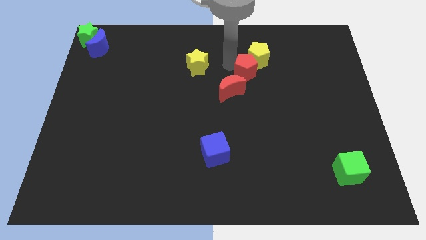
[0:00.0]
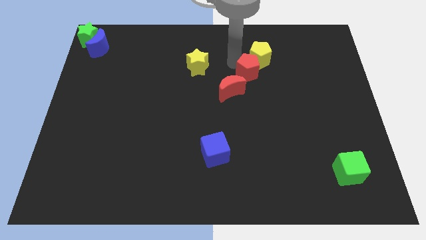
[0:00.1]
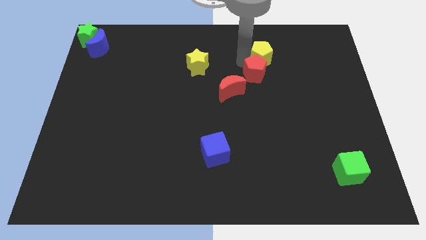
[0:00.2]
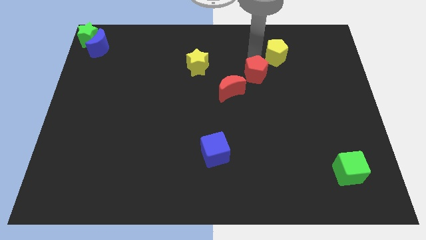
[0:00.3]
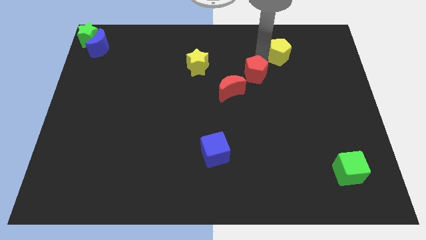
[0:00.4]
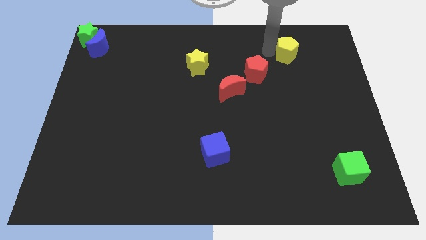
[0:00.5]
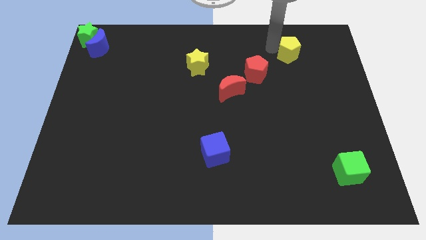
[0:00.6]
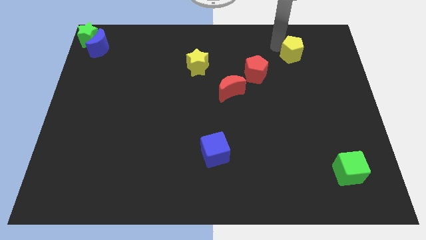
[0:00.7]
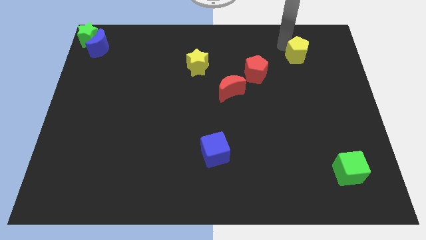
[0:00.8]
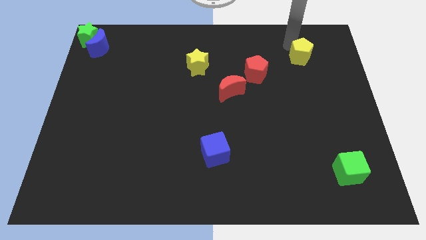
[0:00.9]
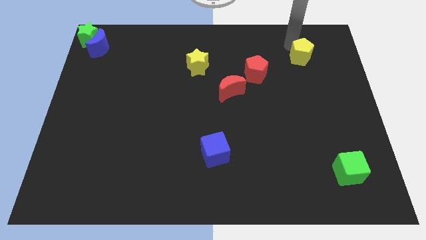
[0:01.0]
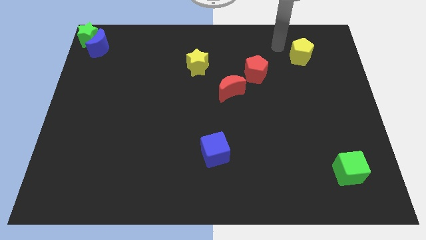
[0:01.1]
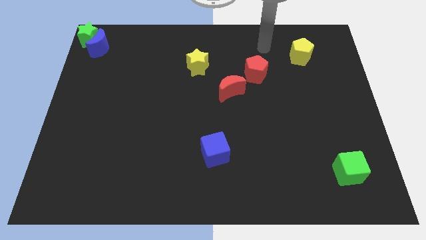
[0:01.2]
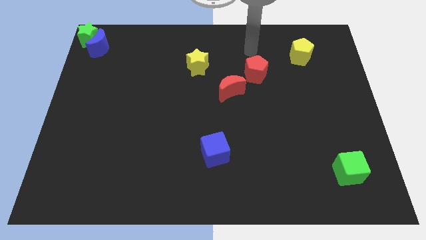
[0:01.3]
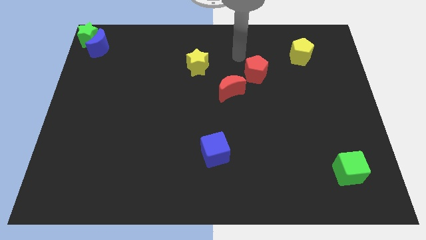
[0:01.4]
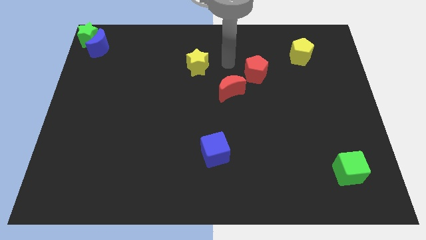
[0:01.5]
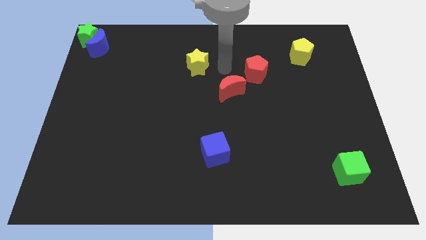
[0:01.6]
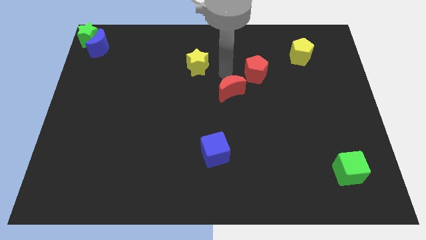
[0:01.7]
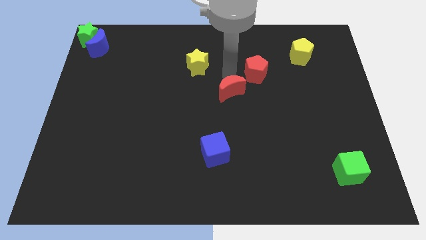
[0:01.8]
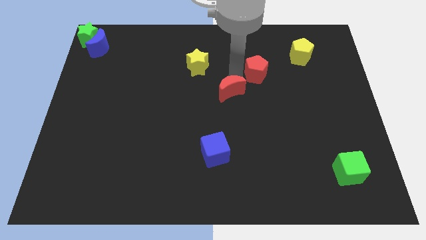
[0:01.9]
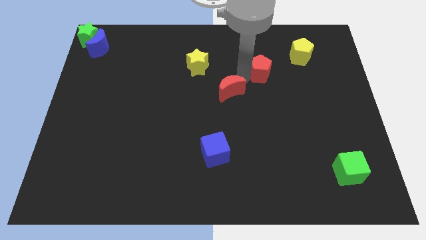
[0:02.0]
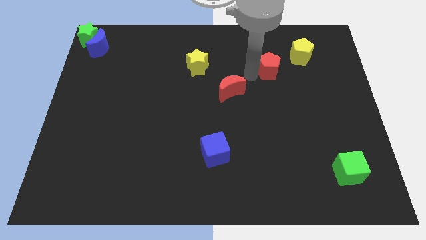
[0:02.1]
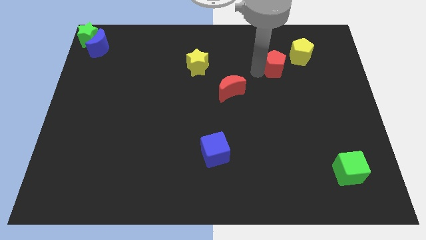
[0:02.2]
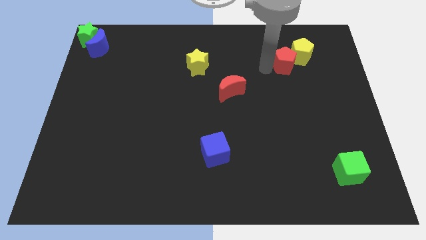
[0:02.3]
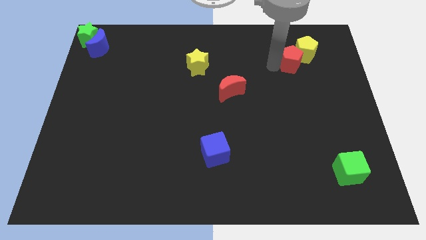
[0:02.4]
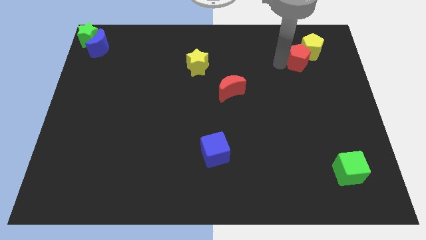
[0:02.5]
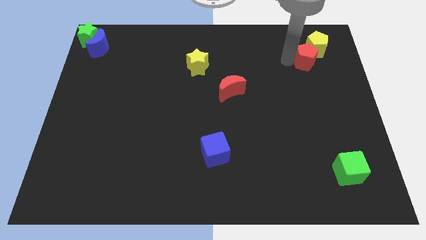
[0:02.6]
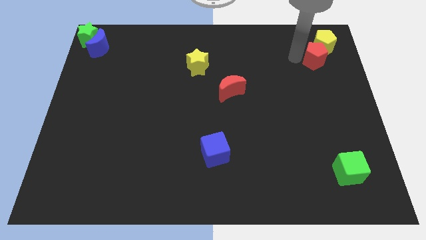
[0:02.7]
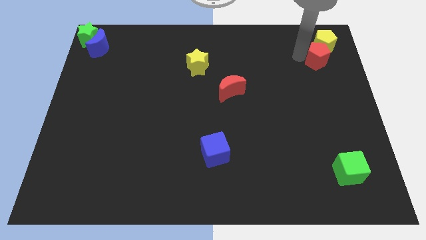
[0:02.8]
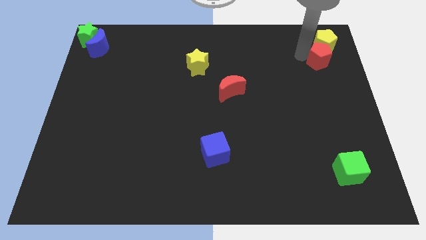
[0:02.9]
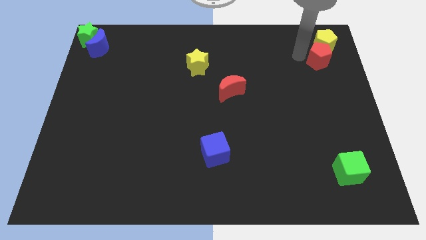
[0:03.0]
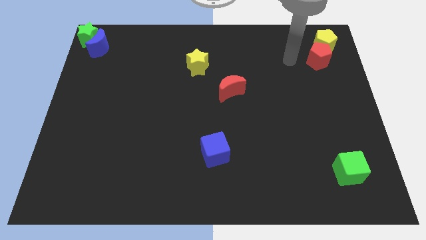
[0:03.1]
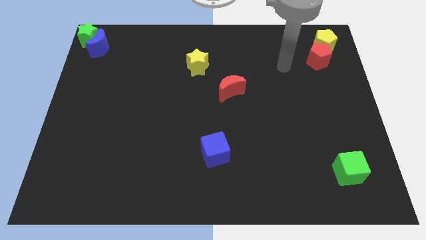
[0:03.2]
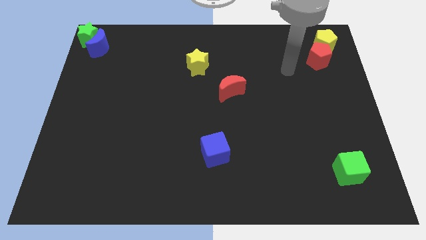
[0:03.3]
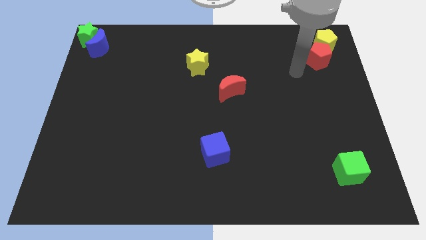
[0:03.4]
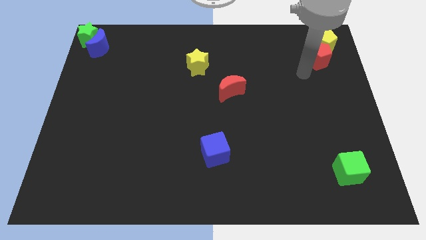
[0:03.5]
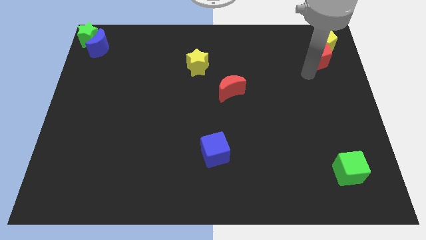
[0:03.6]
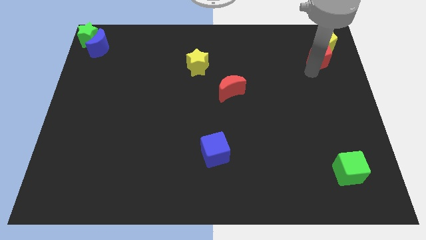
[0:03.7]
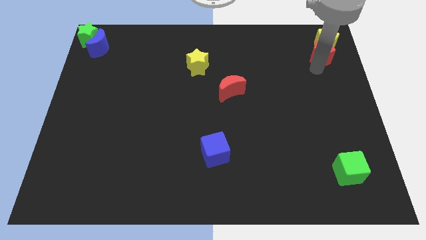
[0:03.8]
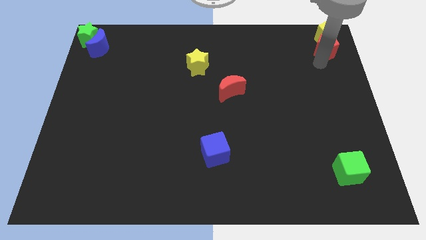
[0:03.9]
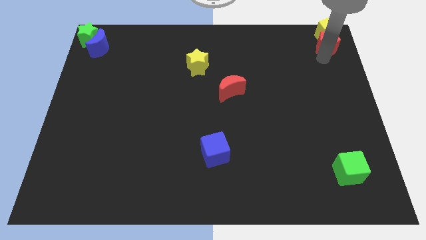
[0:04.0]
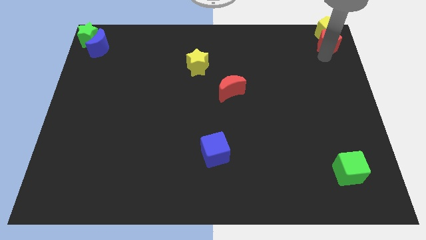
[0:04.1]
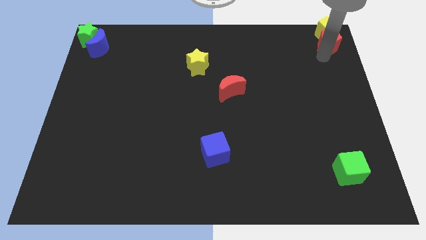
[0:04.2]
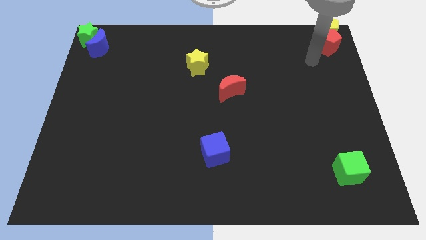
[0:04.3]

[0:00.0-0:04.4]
push the yellow pentagon and red pentagon to the top right of the board

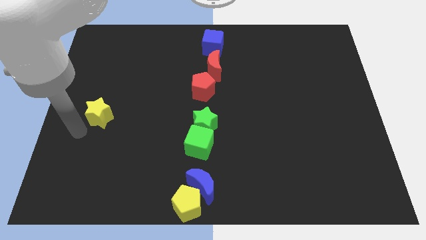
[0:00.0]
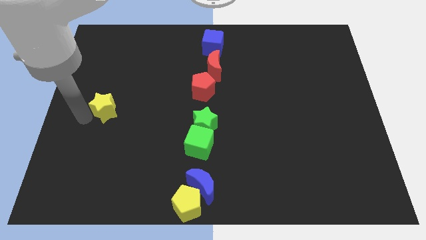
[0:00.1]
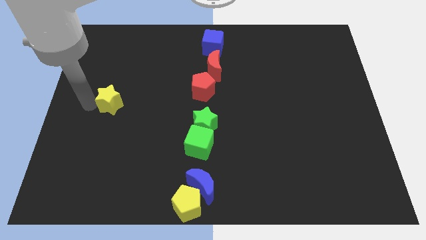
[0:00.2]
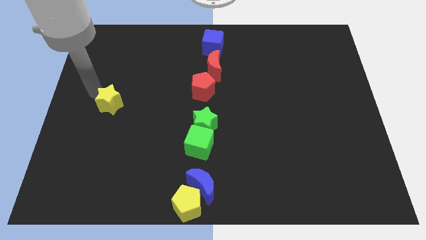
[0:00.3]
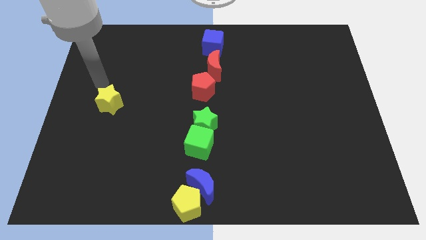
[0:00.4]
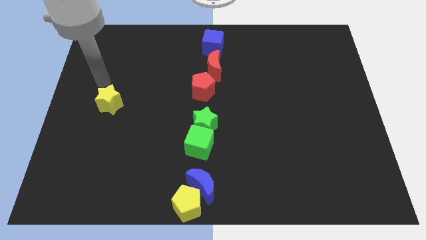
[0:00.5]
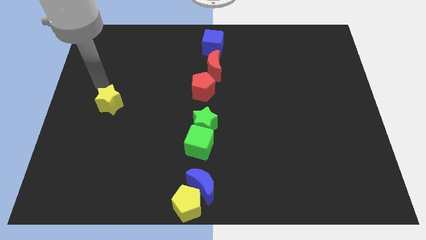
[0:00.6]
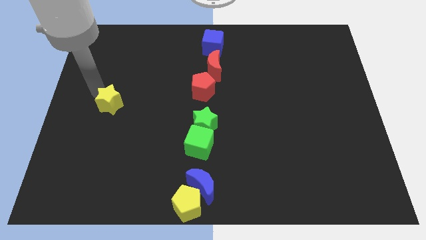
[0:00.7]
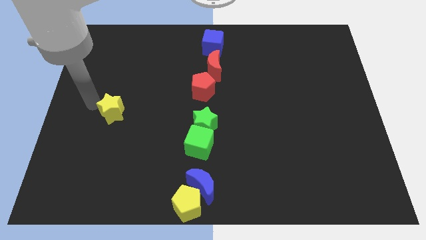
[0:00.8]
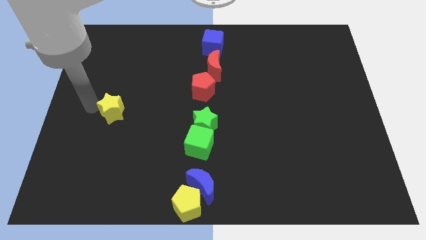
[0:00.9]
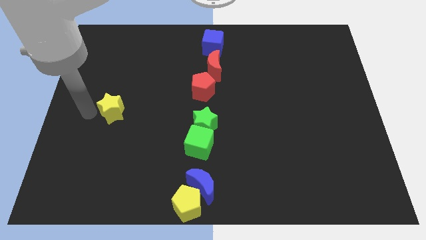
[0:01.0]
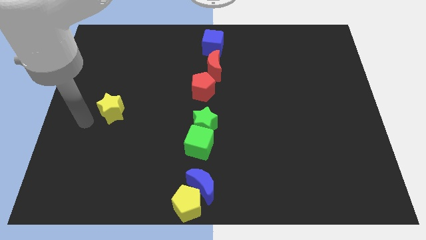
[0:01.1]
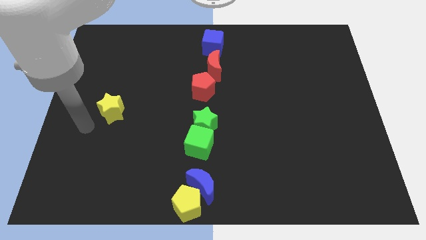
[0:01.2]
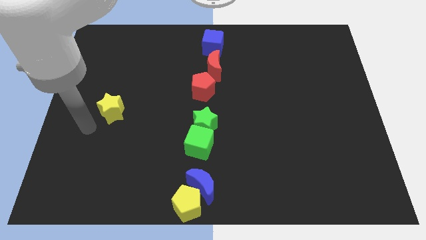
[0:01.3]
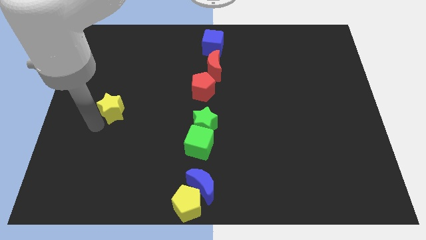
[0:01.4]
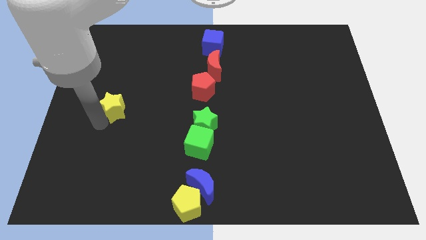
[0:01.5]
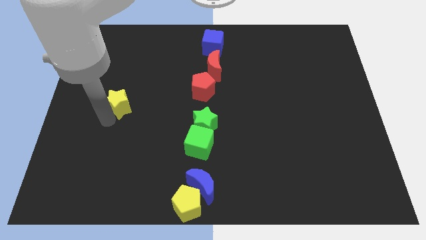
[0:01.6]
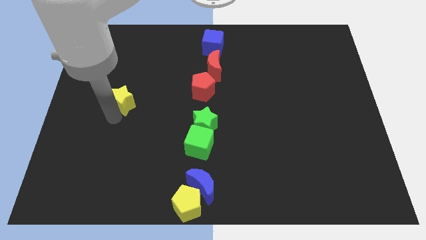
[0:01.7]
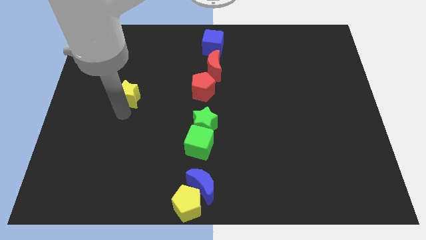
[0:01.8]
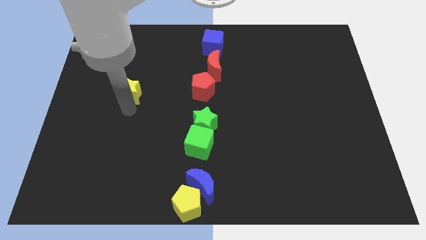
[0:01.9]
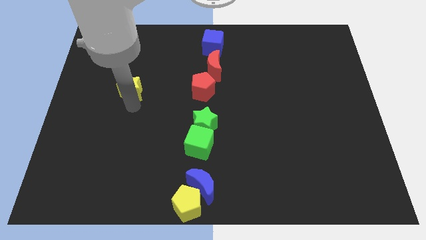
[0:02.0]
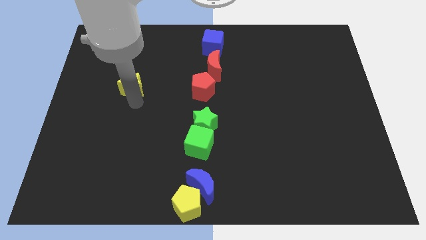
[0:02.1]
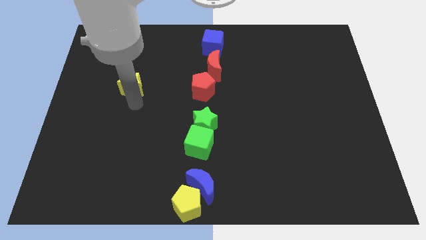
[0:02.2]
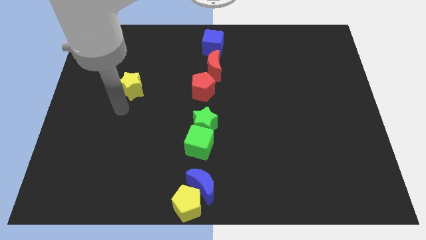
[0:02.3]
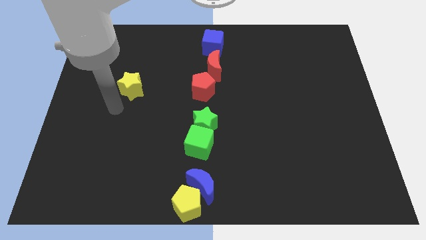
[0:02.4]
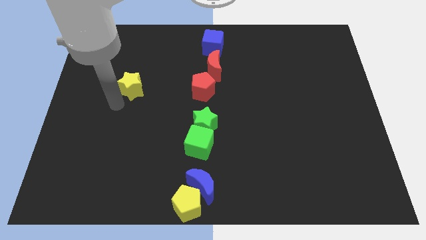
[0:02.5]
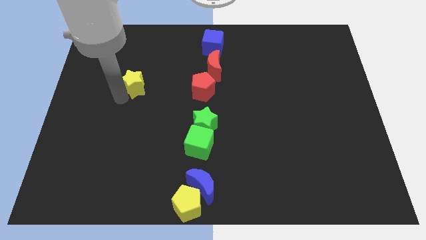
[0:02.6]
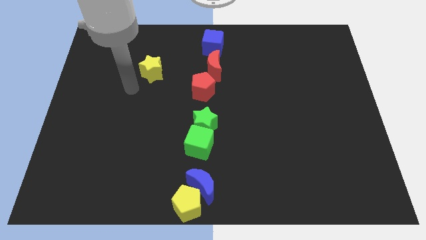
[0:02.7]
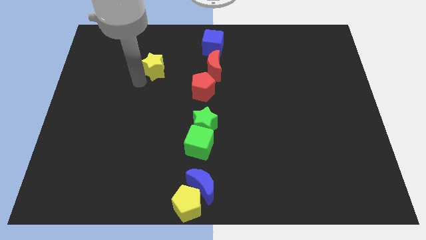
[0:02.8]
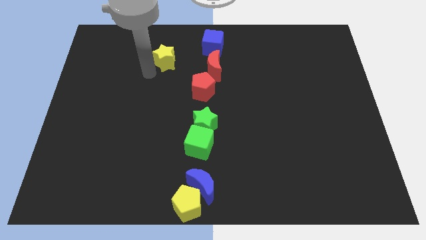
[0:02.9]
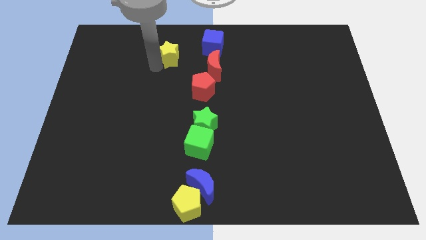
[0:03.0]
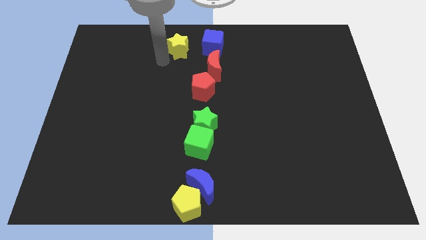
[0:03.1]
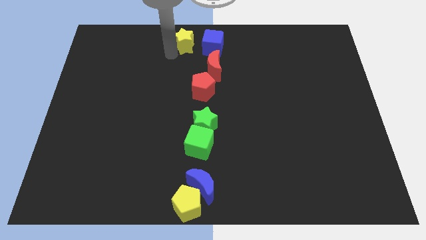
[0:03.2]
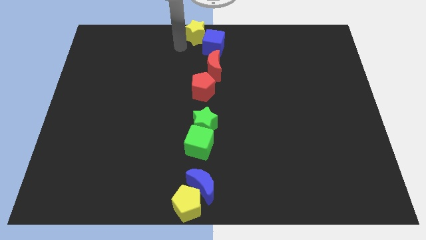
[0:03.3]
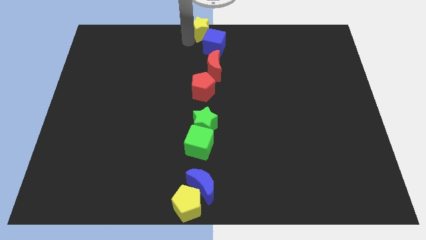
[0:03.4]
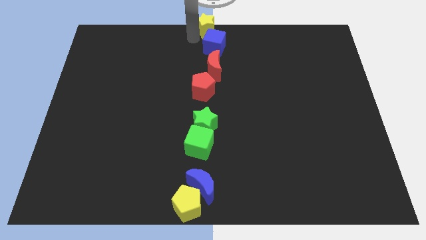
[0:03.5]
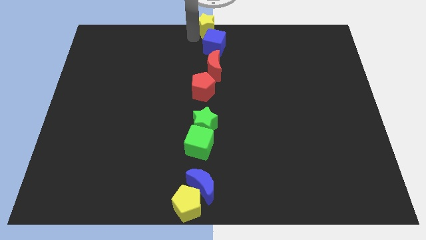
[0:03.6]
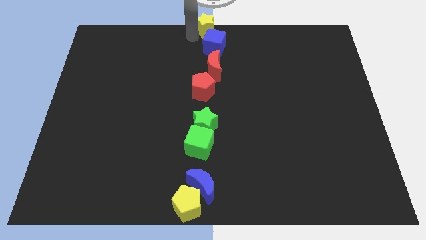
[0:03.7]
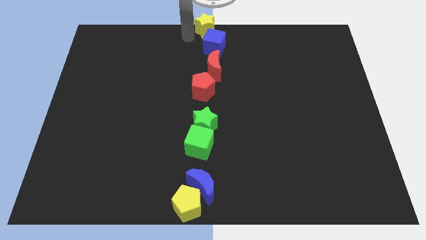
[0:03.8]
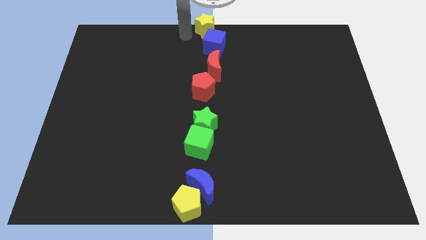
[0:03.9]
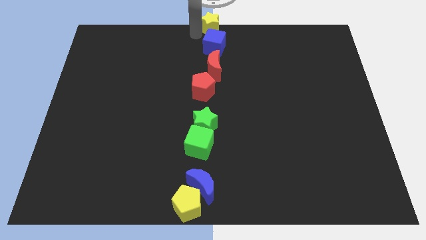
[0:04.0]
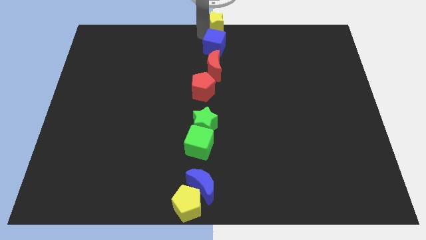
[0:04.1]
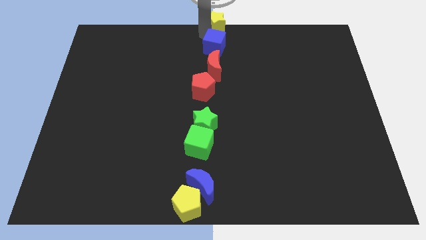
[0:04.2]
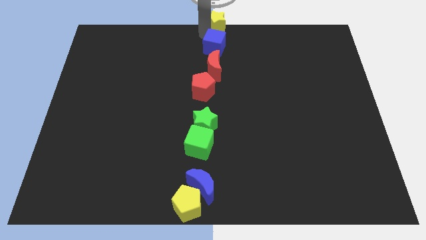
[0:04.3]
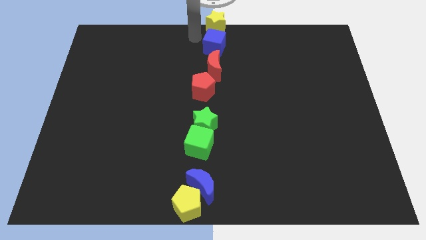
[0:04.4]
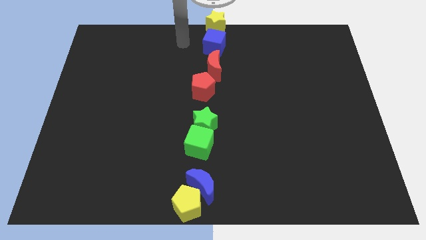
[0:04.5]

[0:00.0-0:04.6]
place the yellow star to the bottom center of the board

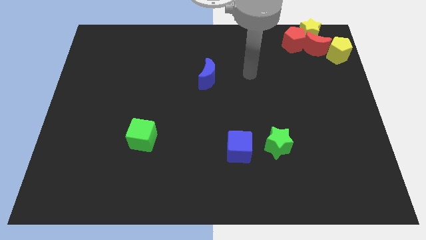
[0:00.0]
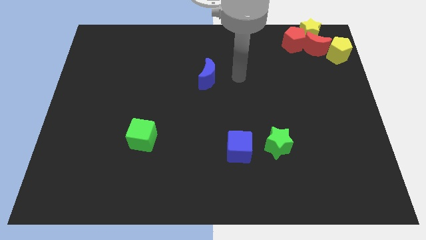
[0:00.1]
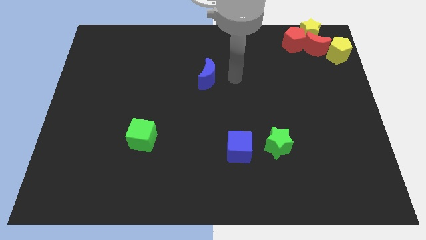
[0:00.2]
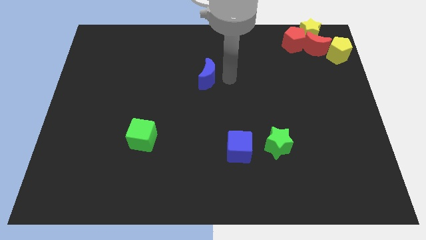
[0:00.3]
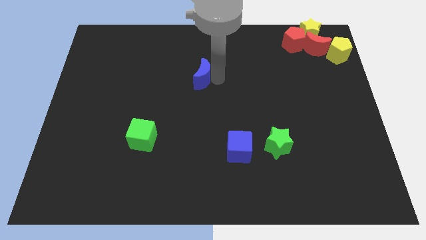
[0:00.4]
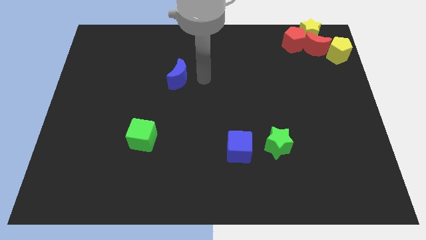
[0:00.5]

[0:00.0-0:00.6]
push the blue moon to the centre of the board
